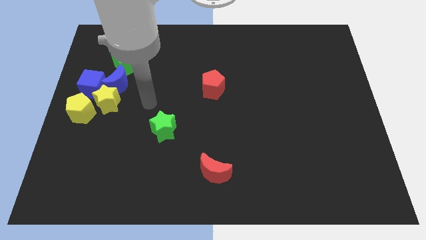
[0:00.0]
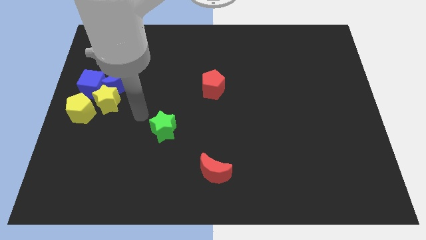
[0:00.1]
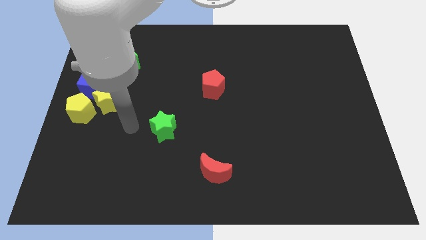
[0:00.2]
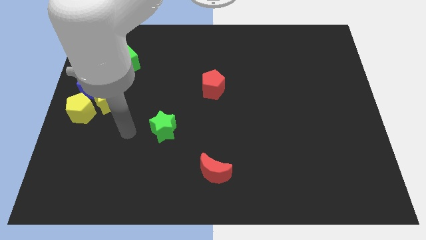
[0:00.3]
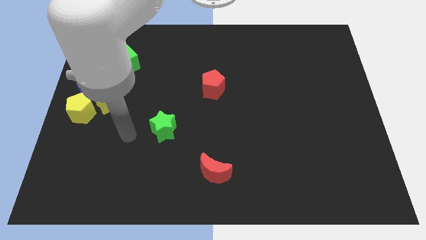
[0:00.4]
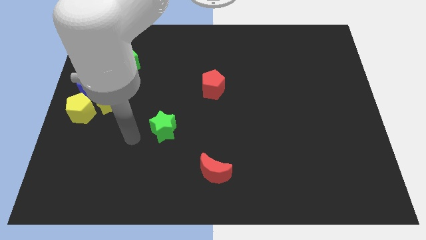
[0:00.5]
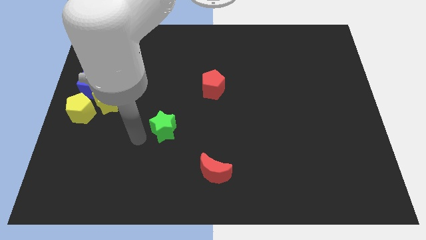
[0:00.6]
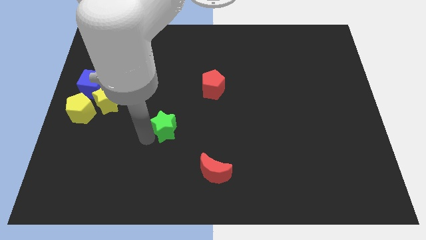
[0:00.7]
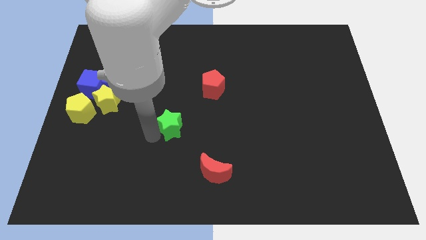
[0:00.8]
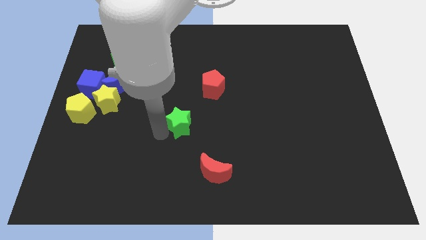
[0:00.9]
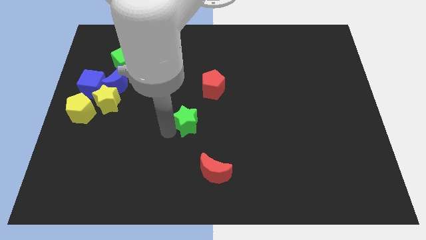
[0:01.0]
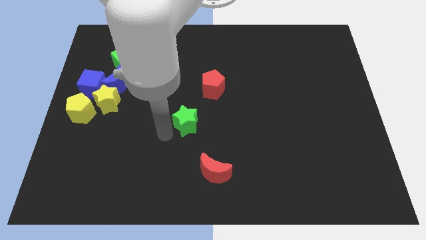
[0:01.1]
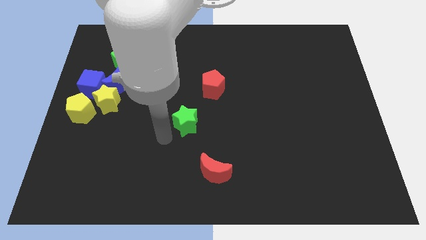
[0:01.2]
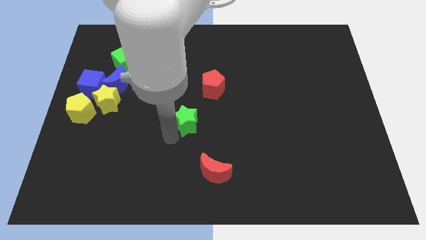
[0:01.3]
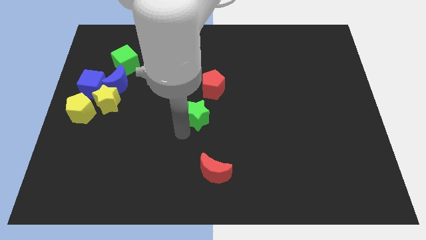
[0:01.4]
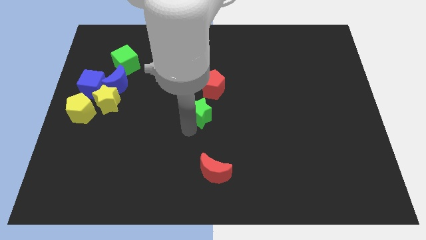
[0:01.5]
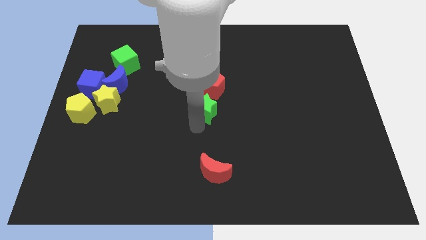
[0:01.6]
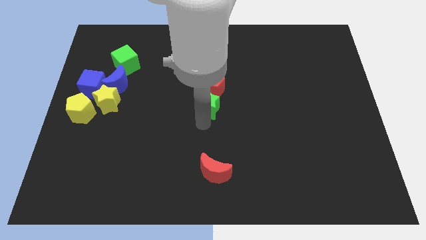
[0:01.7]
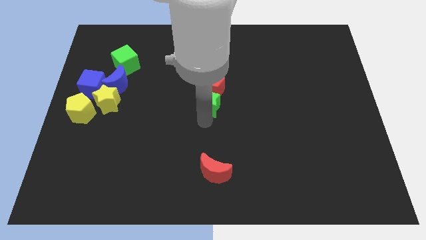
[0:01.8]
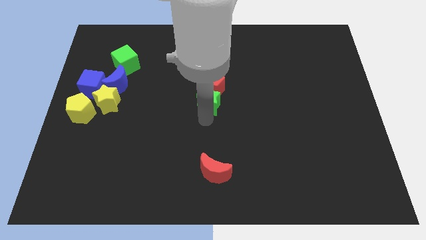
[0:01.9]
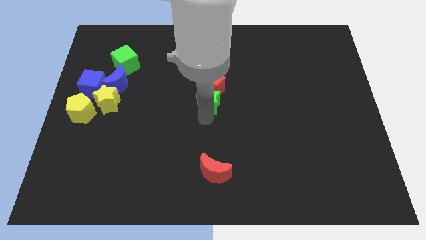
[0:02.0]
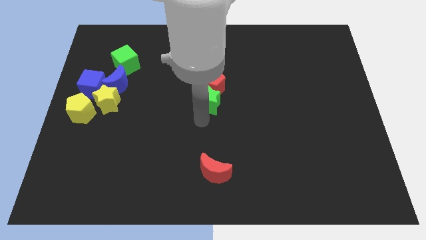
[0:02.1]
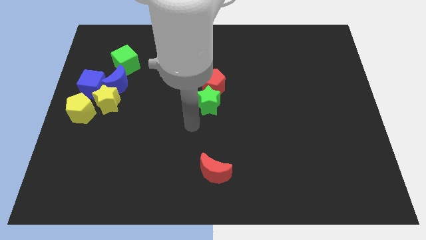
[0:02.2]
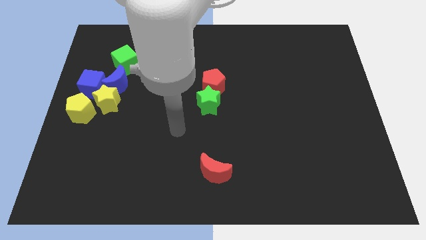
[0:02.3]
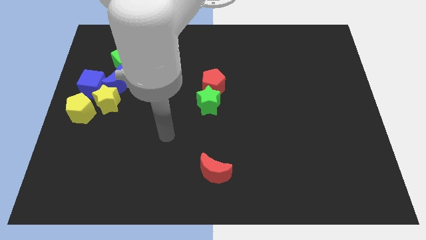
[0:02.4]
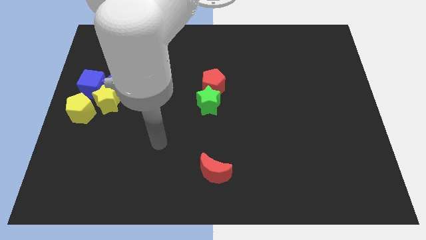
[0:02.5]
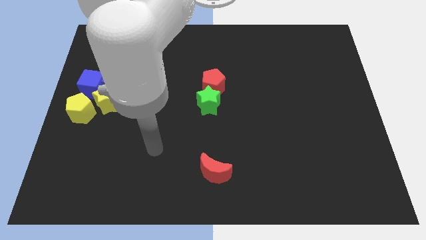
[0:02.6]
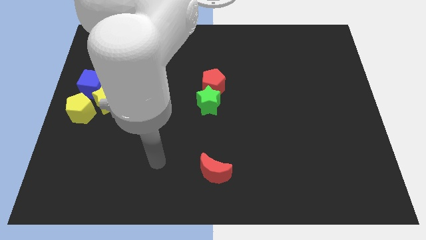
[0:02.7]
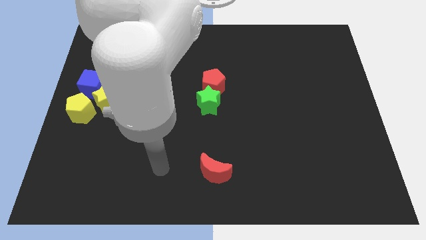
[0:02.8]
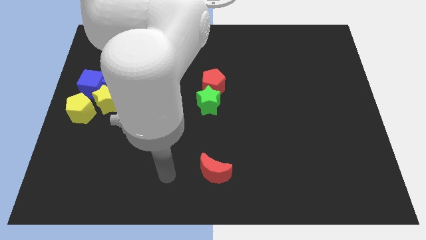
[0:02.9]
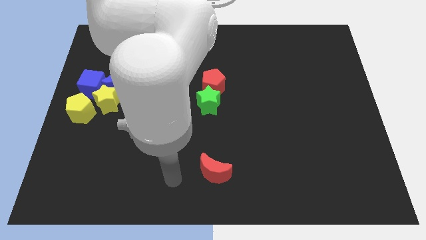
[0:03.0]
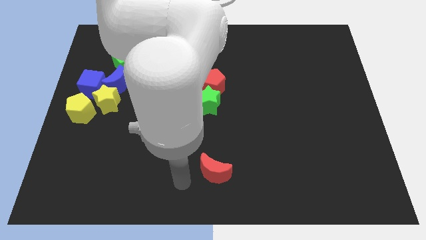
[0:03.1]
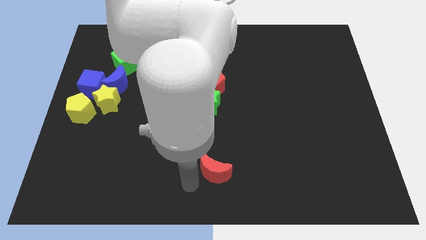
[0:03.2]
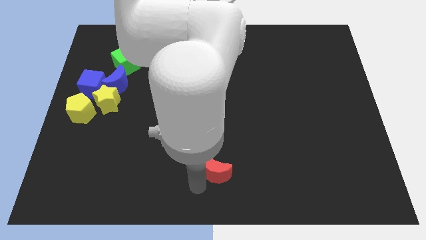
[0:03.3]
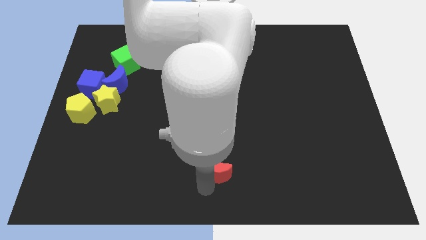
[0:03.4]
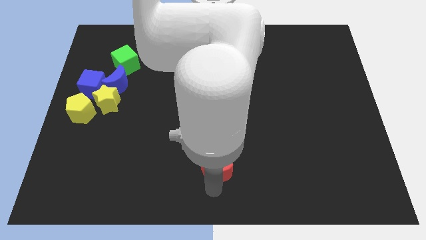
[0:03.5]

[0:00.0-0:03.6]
place the green star below the red pentagon

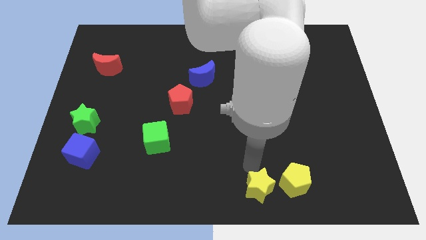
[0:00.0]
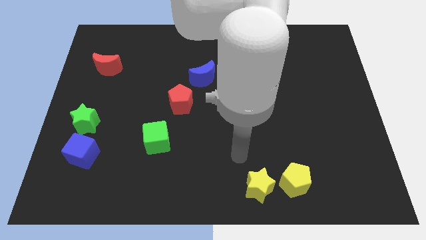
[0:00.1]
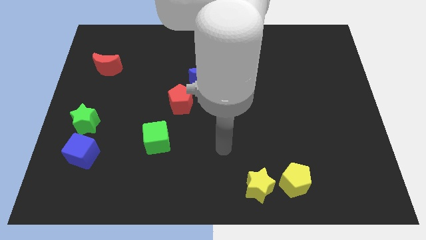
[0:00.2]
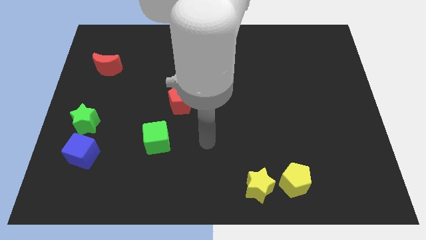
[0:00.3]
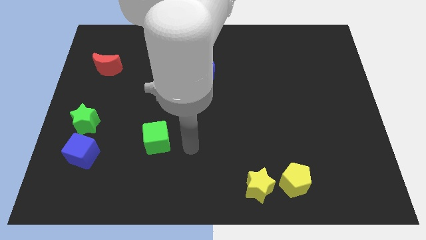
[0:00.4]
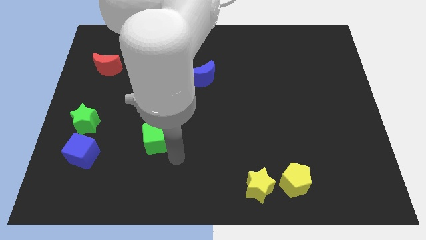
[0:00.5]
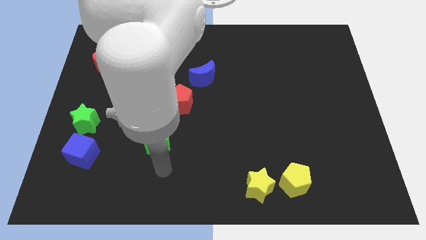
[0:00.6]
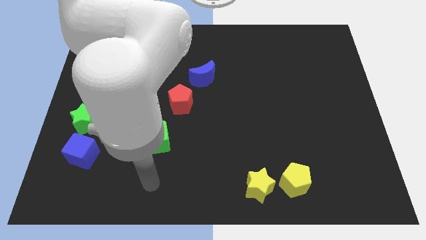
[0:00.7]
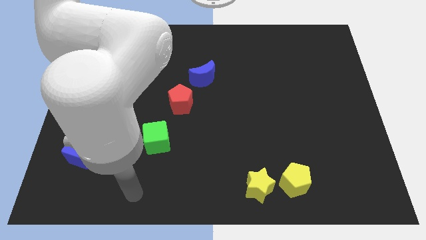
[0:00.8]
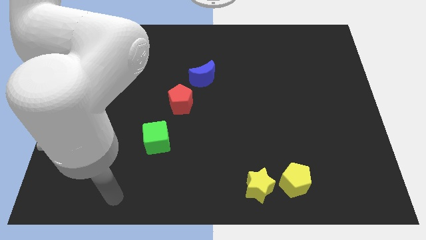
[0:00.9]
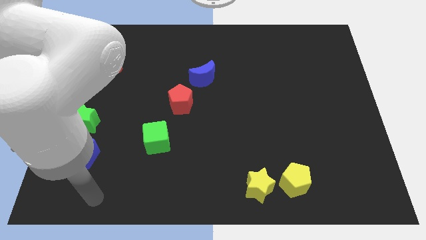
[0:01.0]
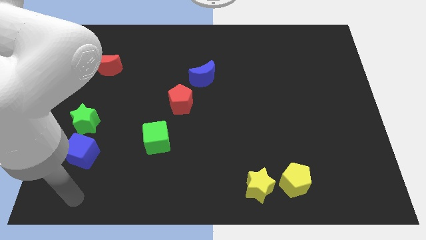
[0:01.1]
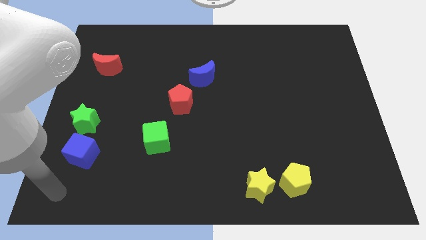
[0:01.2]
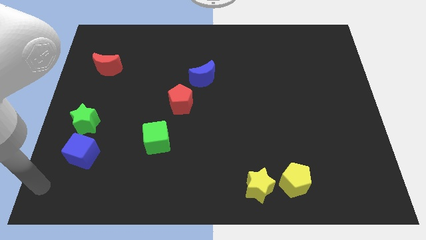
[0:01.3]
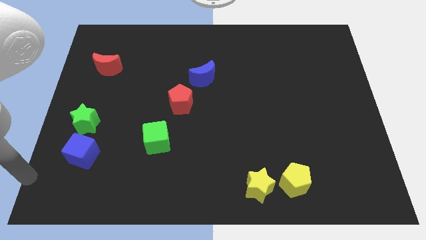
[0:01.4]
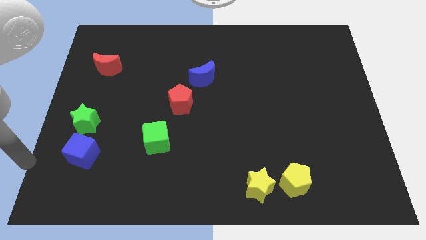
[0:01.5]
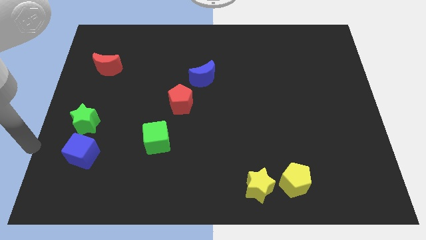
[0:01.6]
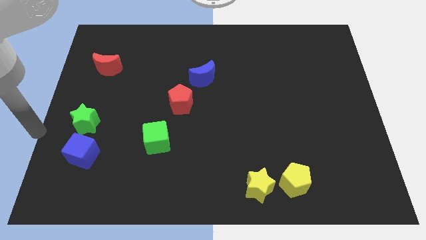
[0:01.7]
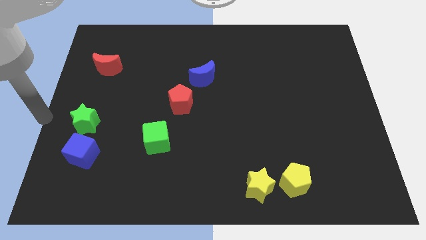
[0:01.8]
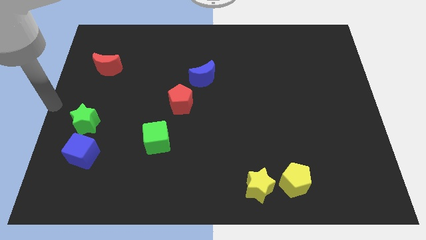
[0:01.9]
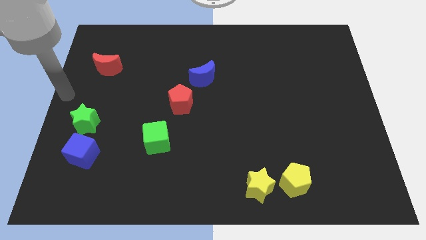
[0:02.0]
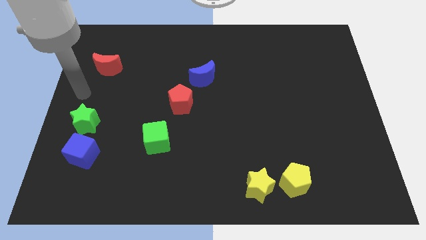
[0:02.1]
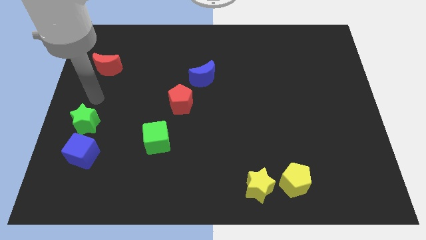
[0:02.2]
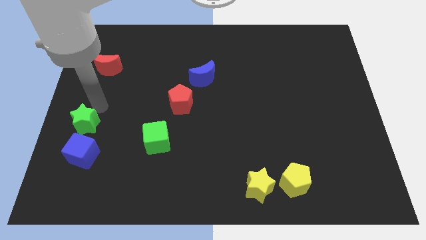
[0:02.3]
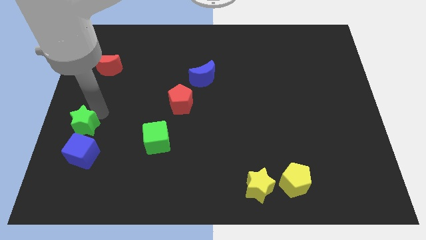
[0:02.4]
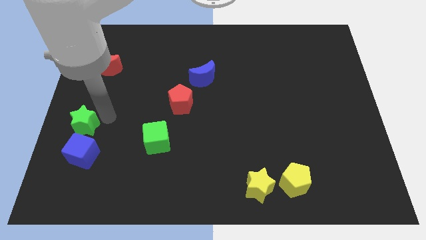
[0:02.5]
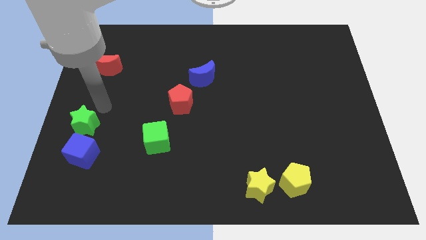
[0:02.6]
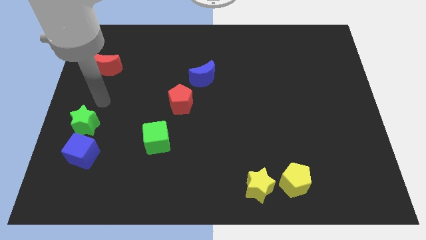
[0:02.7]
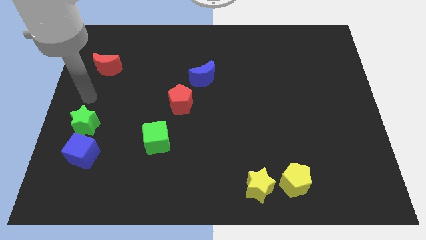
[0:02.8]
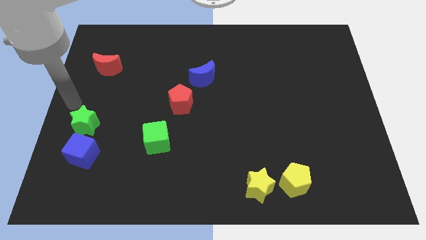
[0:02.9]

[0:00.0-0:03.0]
move the arm to the top of the green star

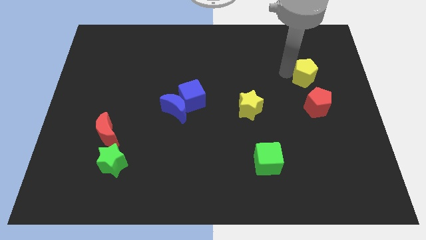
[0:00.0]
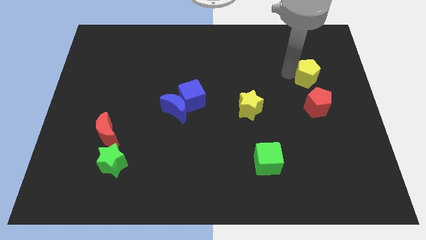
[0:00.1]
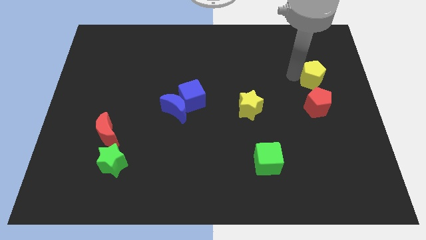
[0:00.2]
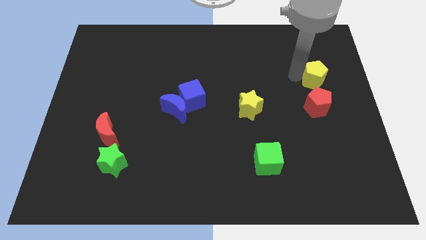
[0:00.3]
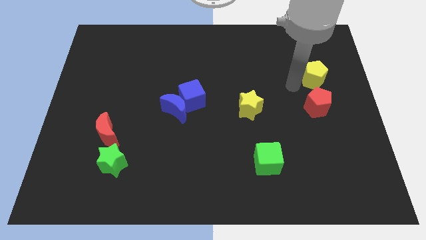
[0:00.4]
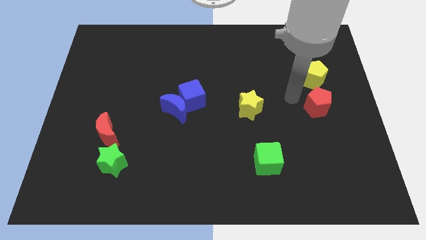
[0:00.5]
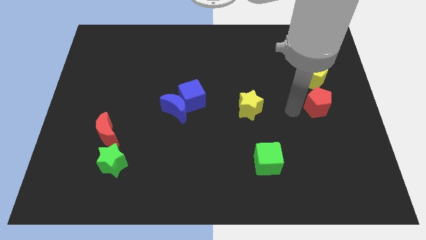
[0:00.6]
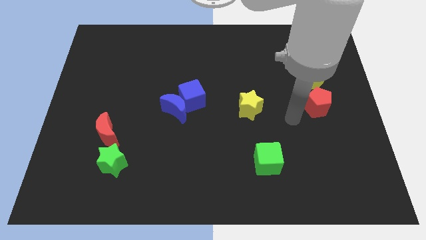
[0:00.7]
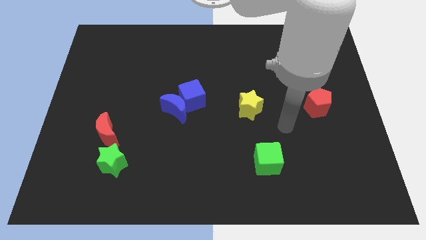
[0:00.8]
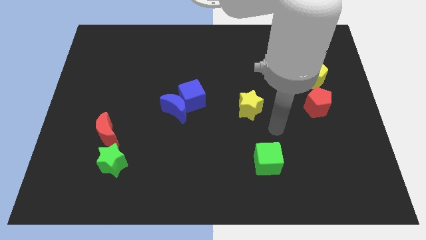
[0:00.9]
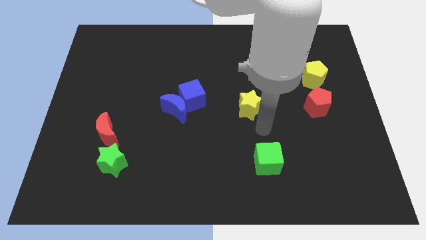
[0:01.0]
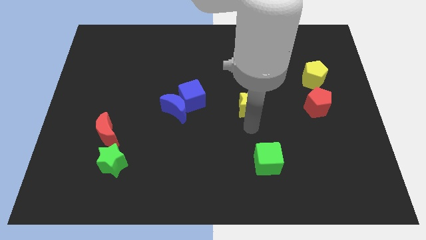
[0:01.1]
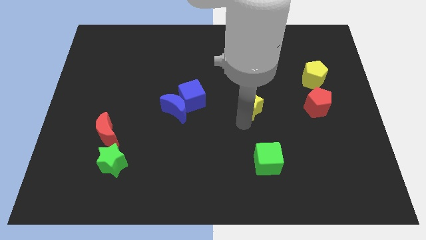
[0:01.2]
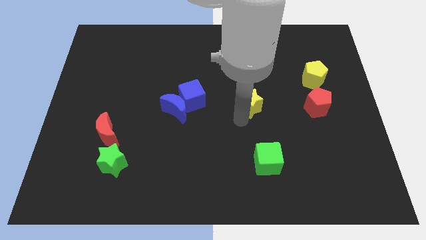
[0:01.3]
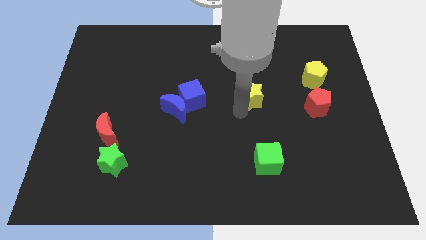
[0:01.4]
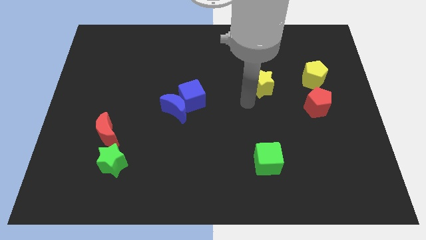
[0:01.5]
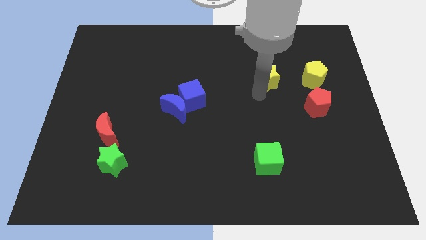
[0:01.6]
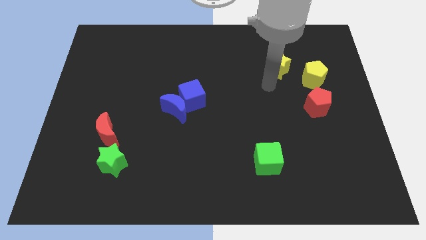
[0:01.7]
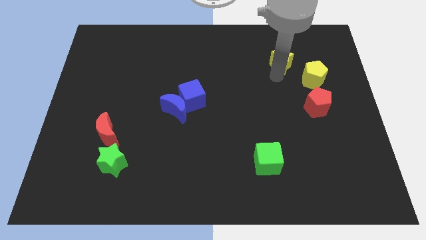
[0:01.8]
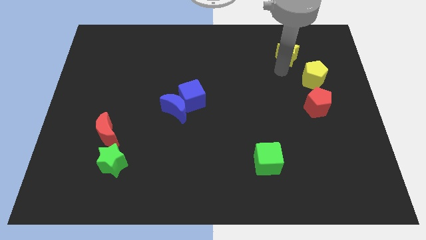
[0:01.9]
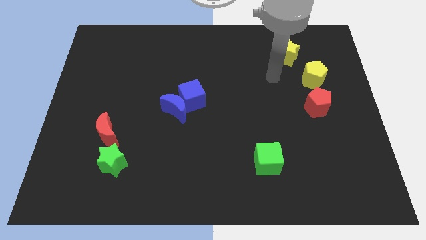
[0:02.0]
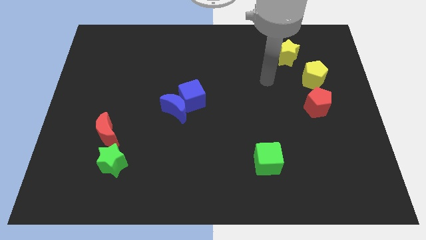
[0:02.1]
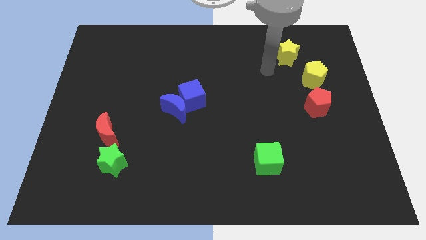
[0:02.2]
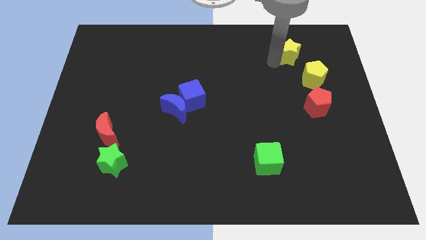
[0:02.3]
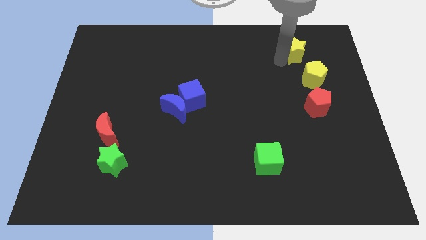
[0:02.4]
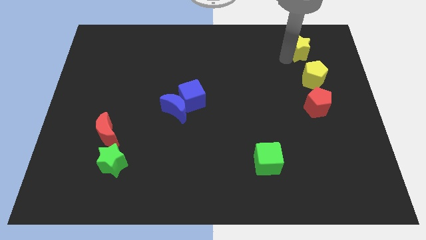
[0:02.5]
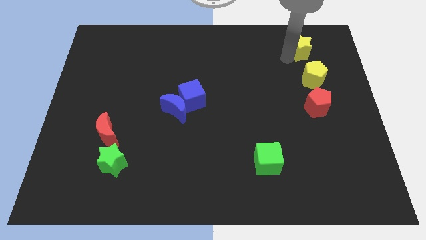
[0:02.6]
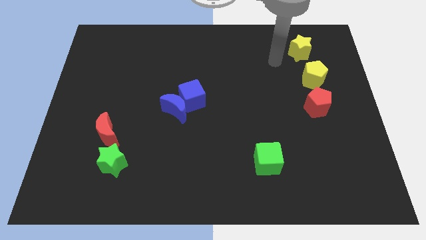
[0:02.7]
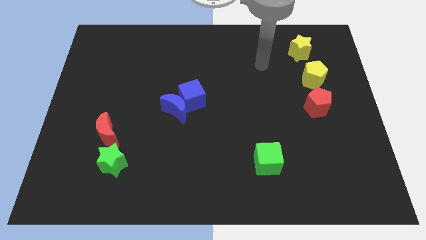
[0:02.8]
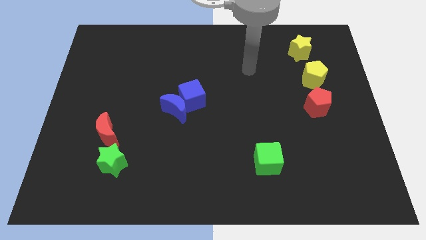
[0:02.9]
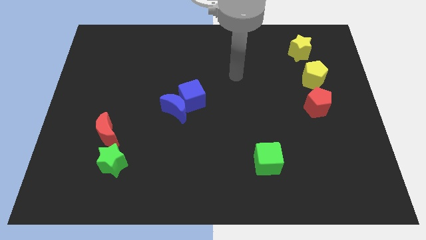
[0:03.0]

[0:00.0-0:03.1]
adjust the yellow star diagonally above the yellow pentagon
